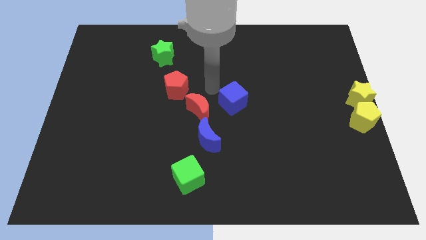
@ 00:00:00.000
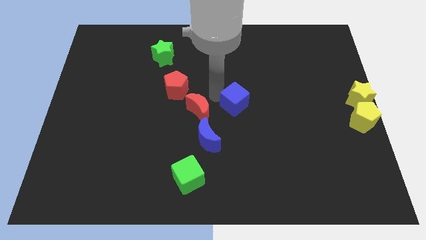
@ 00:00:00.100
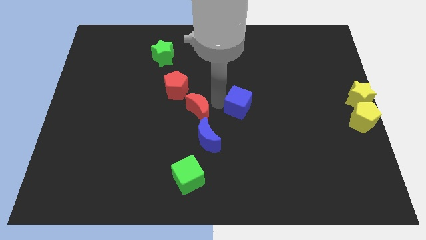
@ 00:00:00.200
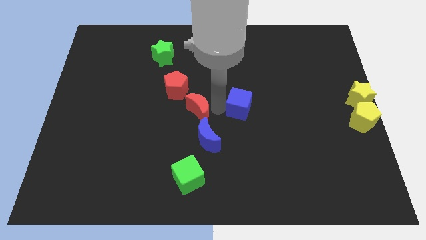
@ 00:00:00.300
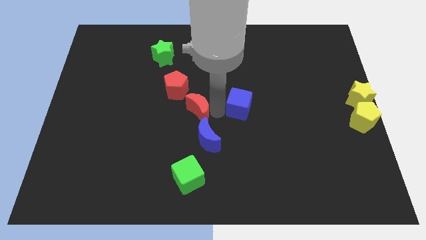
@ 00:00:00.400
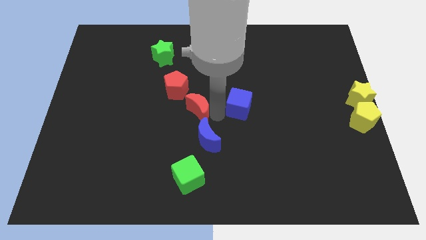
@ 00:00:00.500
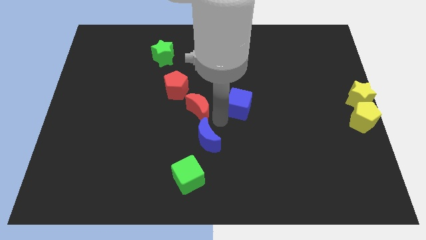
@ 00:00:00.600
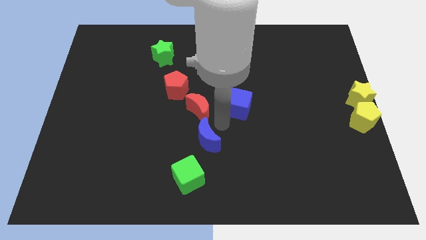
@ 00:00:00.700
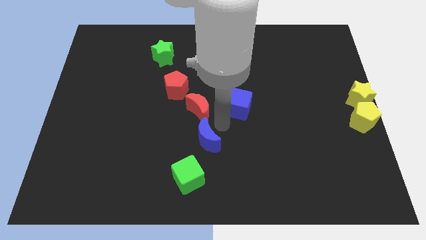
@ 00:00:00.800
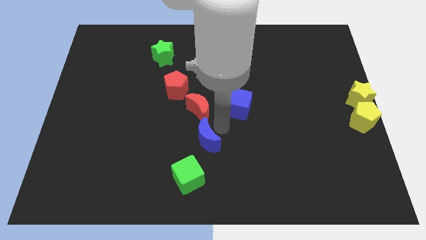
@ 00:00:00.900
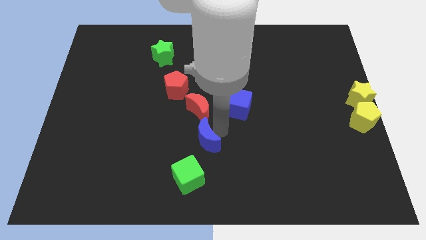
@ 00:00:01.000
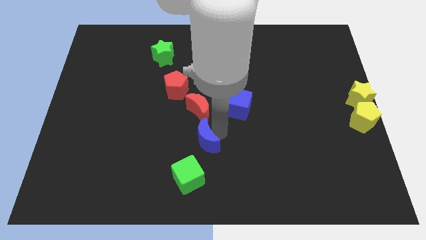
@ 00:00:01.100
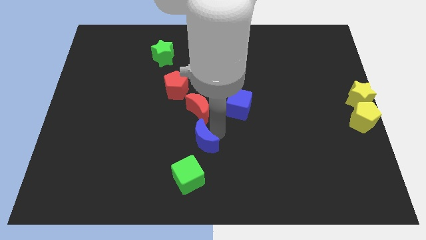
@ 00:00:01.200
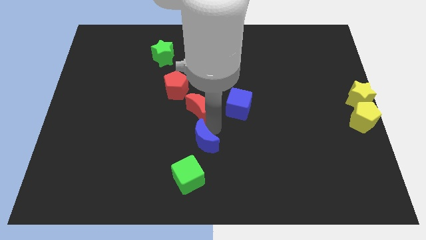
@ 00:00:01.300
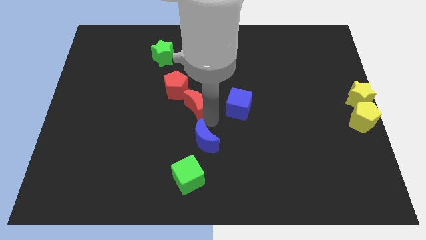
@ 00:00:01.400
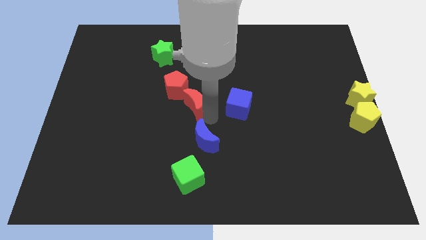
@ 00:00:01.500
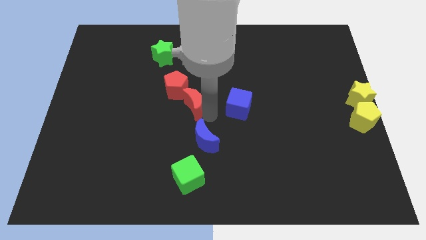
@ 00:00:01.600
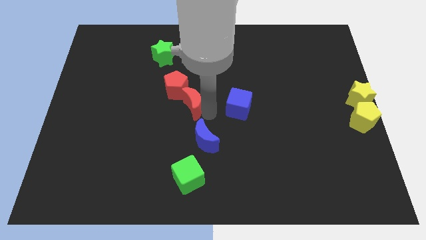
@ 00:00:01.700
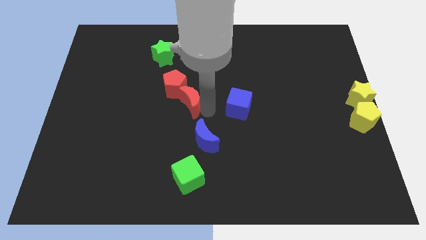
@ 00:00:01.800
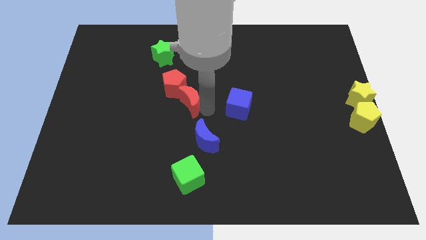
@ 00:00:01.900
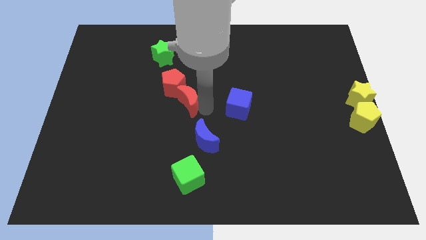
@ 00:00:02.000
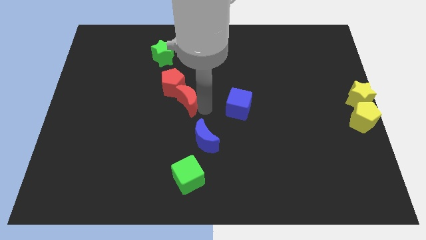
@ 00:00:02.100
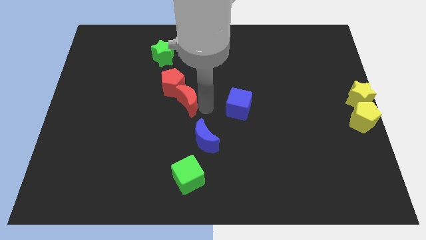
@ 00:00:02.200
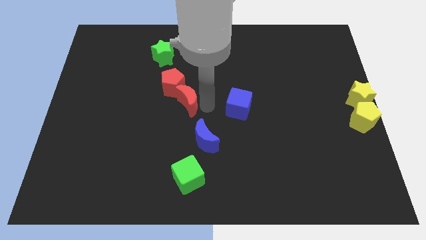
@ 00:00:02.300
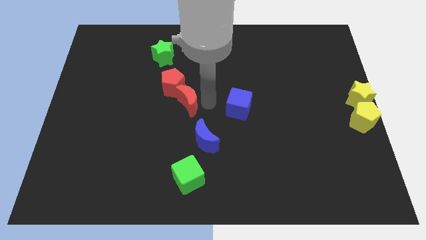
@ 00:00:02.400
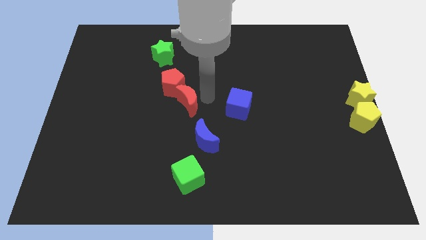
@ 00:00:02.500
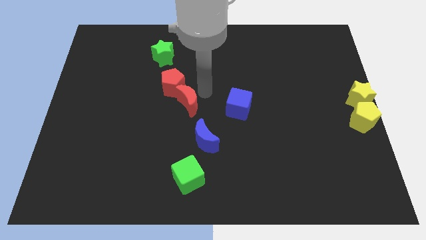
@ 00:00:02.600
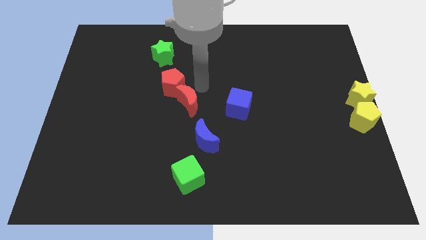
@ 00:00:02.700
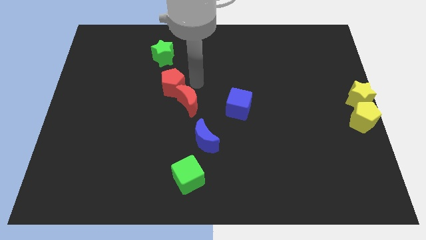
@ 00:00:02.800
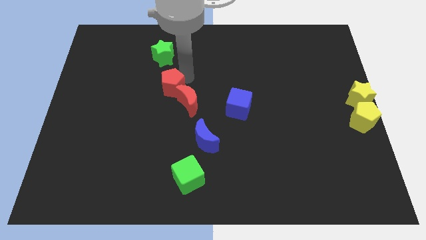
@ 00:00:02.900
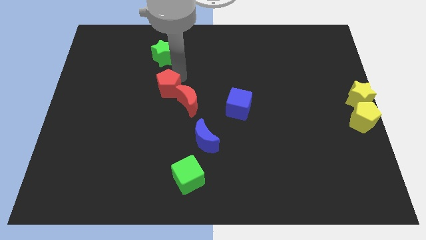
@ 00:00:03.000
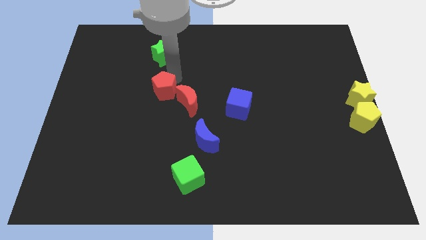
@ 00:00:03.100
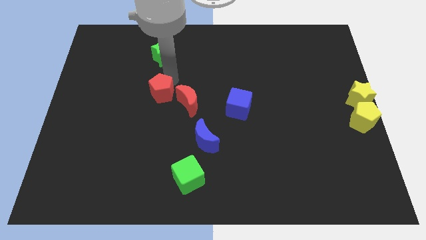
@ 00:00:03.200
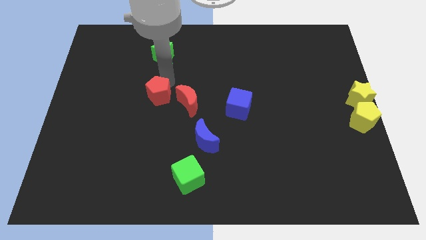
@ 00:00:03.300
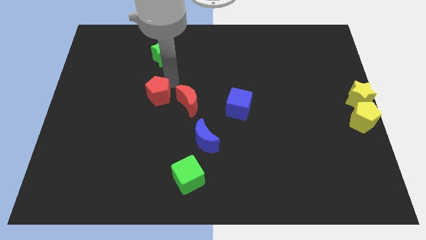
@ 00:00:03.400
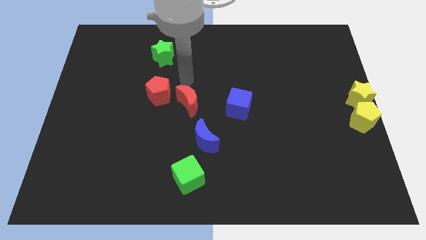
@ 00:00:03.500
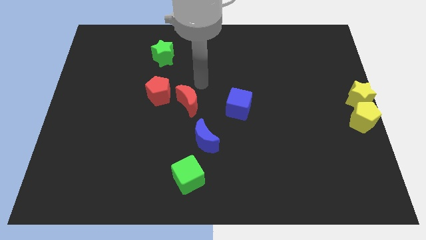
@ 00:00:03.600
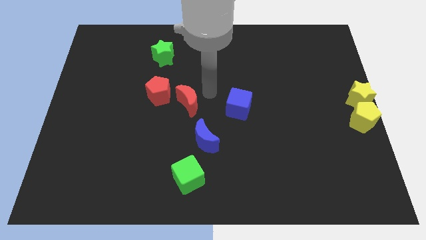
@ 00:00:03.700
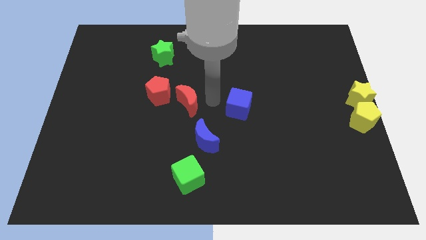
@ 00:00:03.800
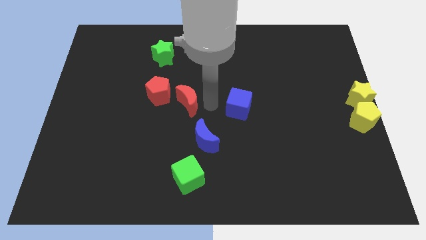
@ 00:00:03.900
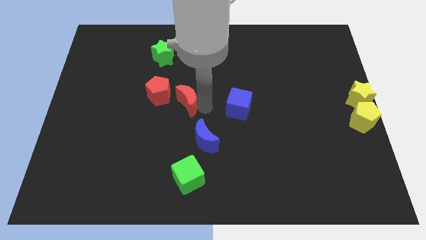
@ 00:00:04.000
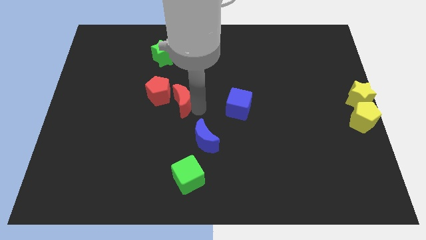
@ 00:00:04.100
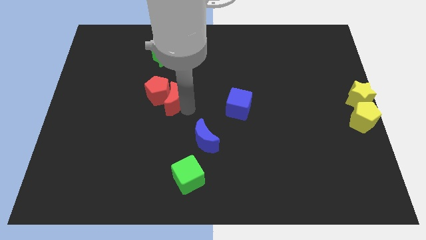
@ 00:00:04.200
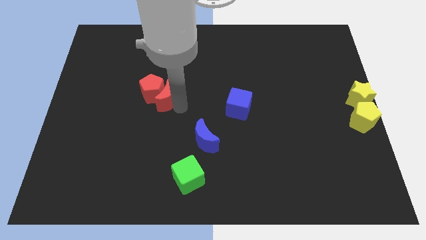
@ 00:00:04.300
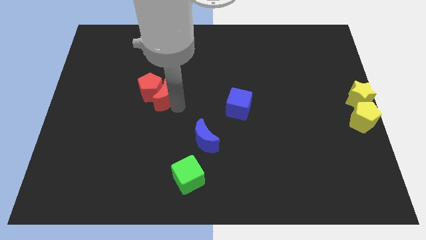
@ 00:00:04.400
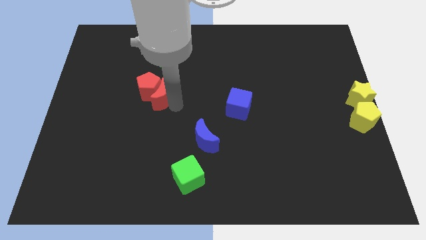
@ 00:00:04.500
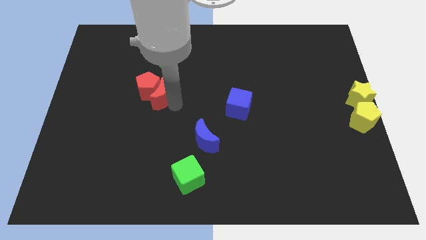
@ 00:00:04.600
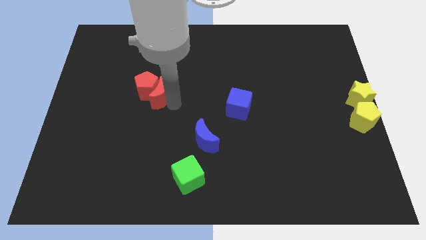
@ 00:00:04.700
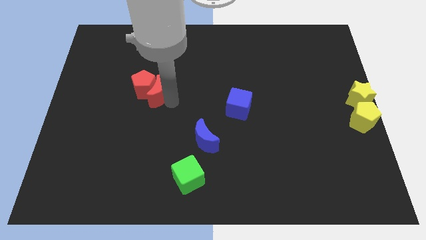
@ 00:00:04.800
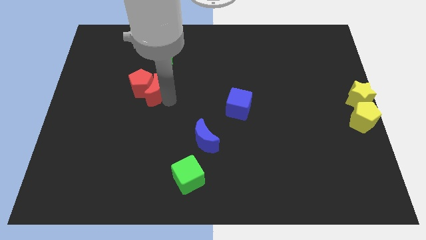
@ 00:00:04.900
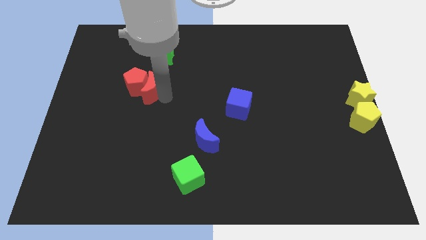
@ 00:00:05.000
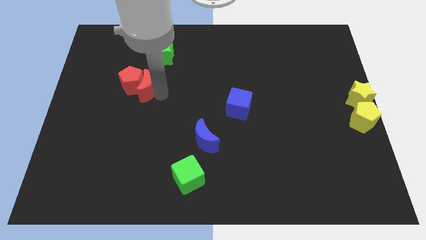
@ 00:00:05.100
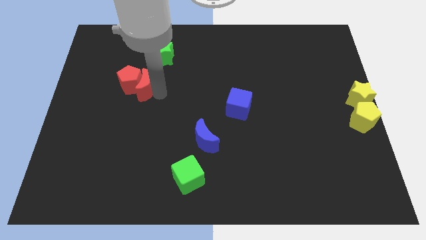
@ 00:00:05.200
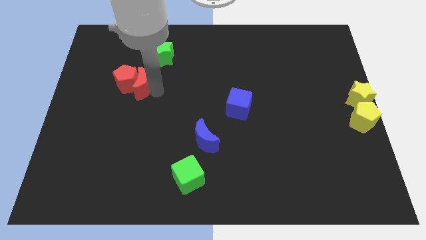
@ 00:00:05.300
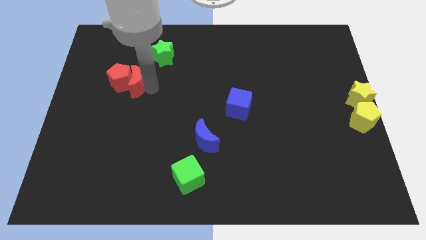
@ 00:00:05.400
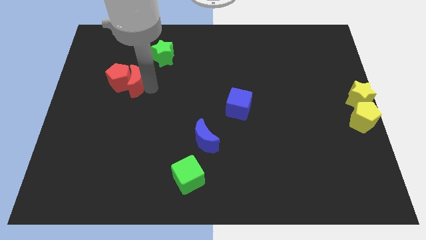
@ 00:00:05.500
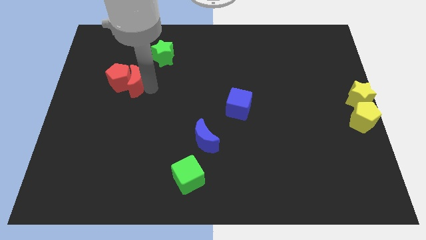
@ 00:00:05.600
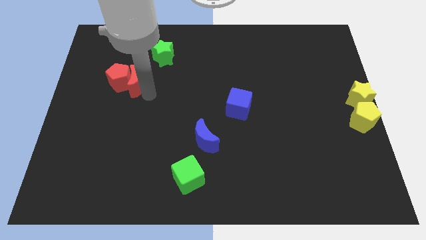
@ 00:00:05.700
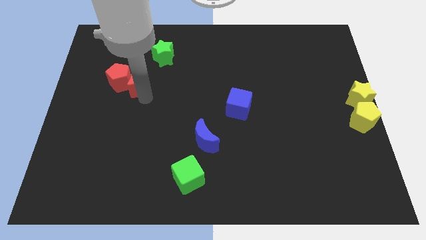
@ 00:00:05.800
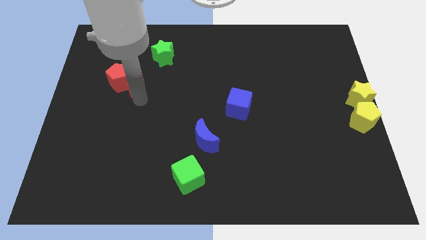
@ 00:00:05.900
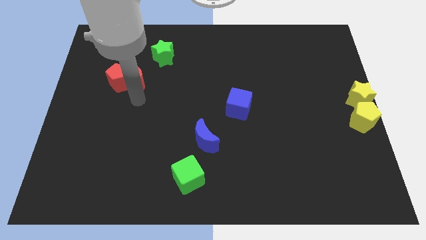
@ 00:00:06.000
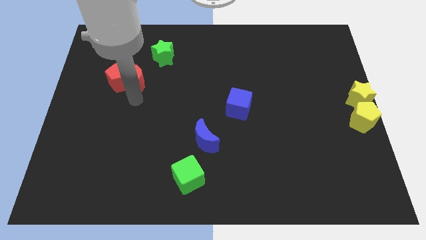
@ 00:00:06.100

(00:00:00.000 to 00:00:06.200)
push the red blocks towards the top left of the board

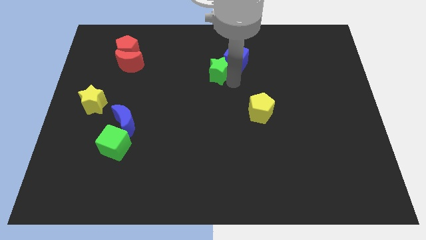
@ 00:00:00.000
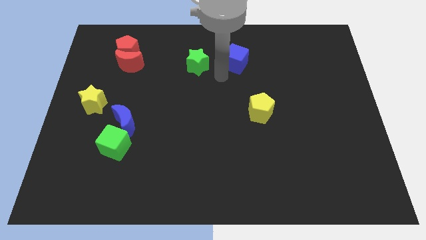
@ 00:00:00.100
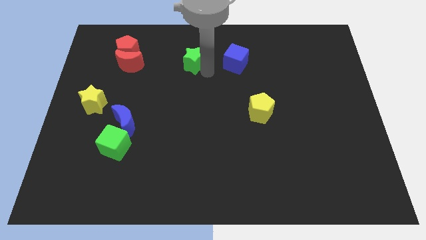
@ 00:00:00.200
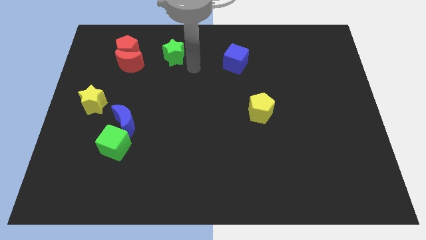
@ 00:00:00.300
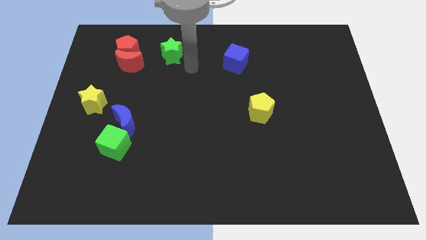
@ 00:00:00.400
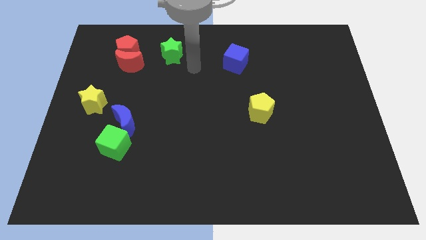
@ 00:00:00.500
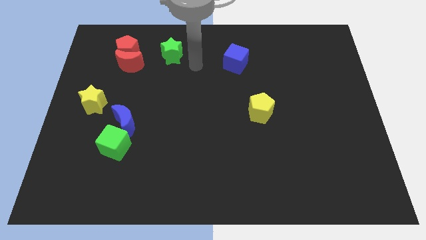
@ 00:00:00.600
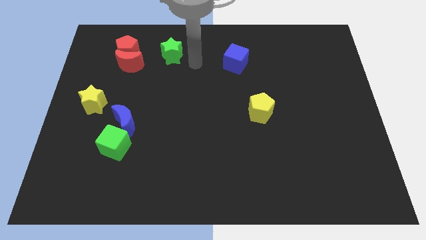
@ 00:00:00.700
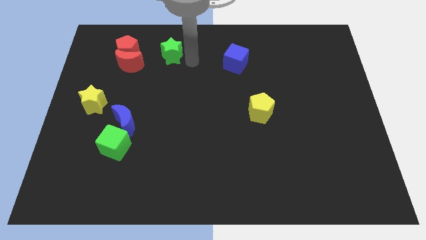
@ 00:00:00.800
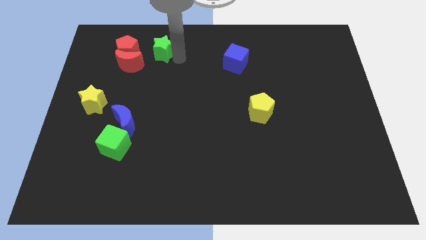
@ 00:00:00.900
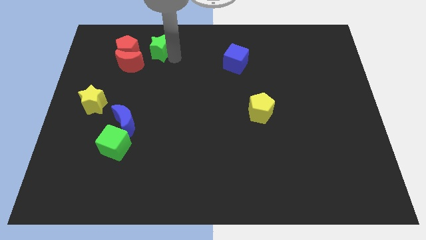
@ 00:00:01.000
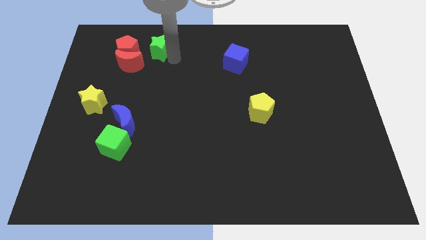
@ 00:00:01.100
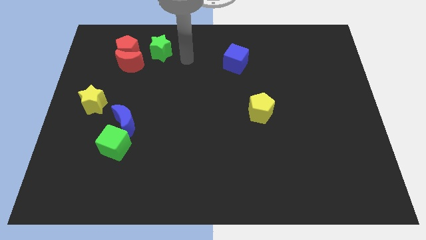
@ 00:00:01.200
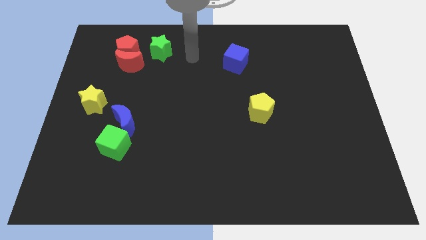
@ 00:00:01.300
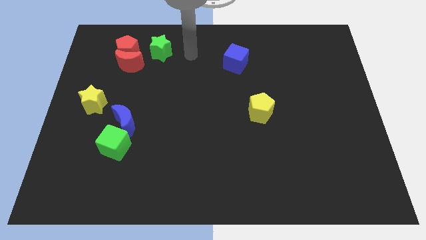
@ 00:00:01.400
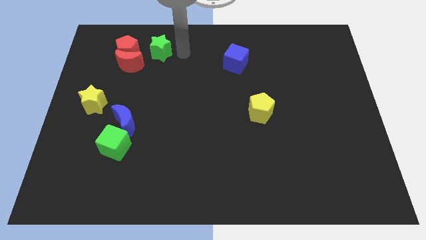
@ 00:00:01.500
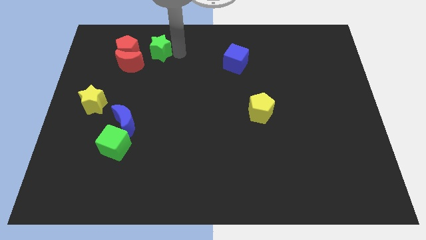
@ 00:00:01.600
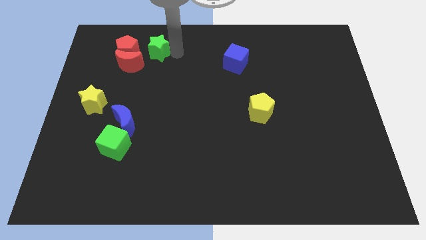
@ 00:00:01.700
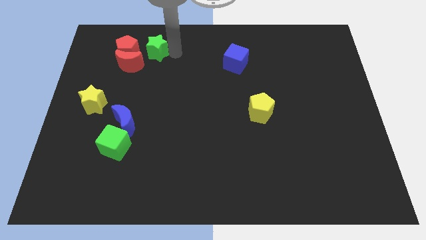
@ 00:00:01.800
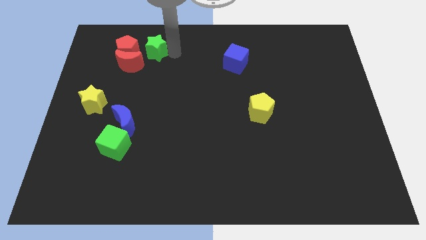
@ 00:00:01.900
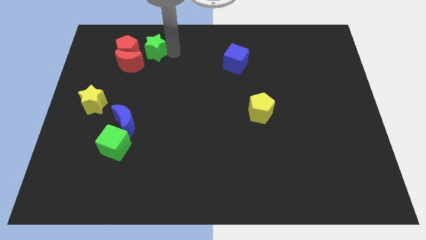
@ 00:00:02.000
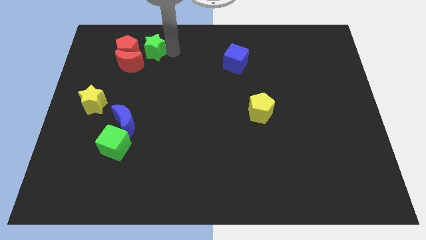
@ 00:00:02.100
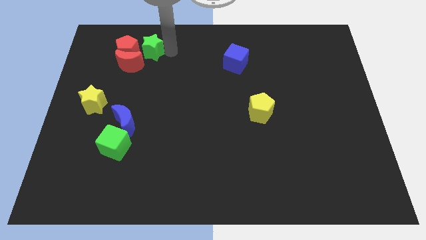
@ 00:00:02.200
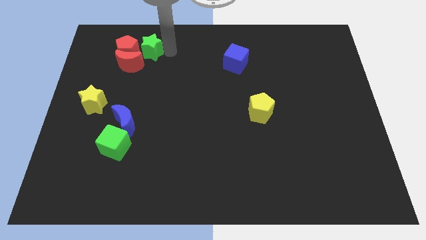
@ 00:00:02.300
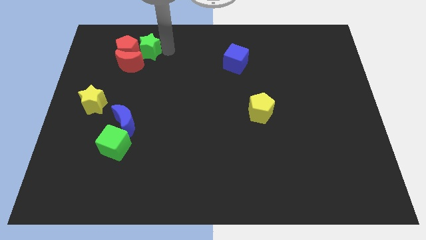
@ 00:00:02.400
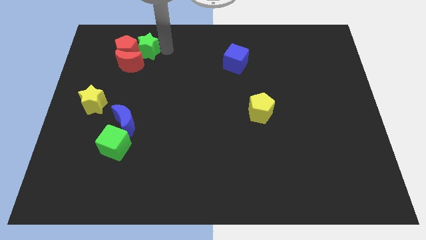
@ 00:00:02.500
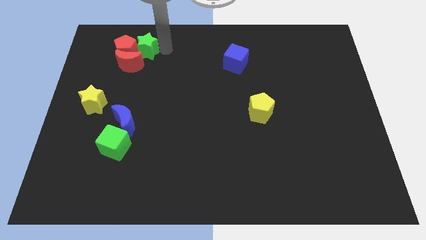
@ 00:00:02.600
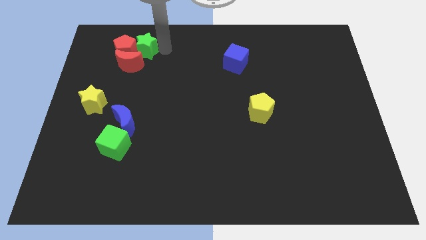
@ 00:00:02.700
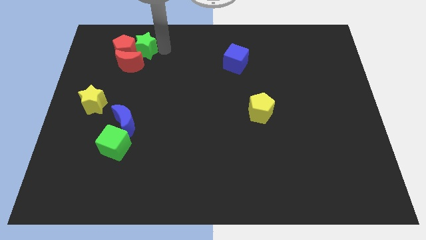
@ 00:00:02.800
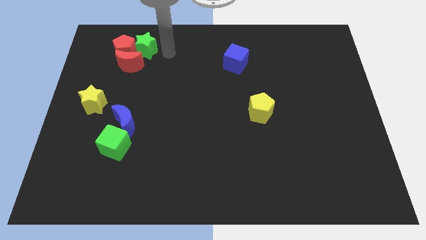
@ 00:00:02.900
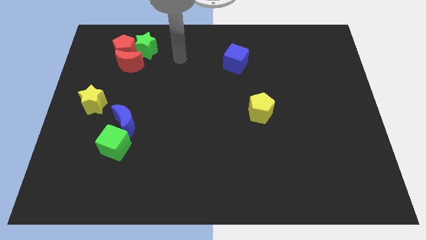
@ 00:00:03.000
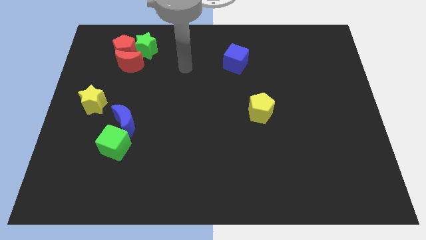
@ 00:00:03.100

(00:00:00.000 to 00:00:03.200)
push the green star into red pentagon
